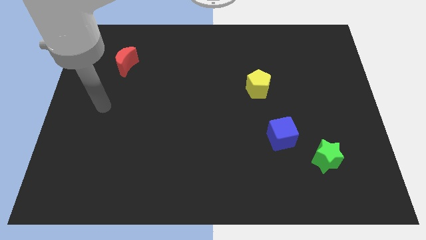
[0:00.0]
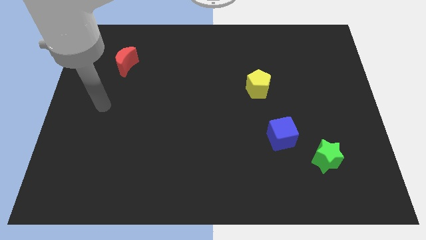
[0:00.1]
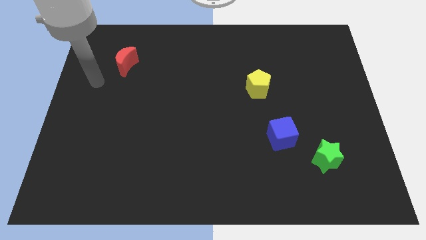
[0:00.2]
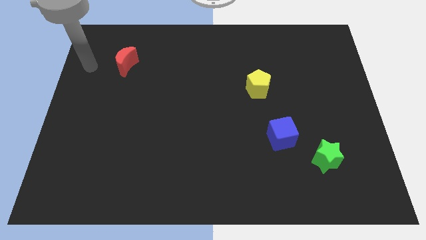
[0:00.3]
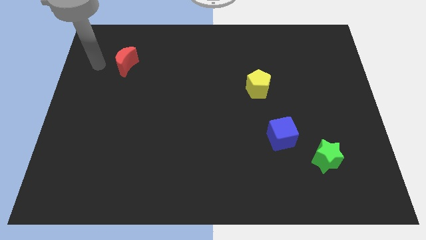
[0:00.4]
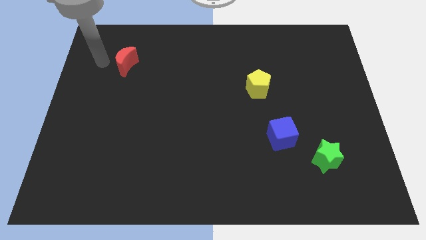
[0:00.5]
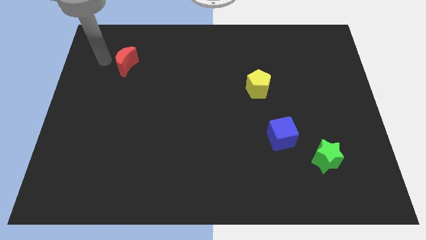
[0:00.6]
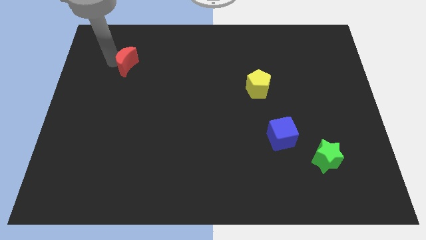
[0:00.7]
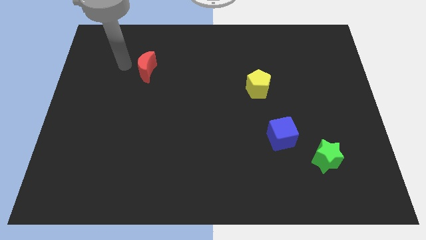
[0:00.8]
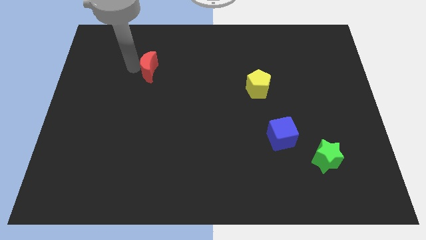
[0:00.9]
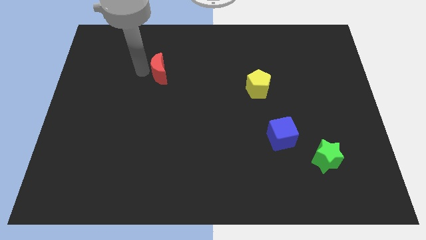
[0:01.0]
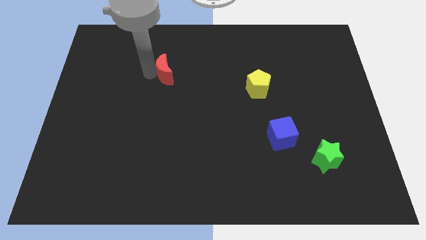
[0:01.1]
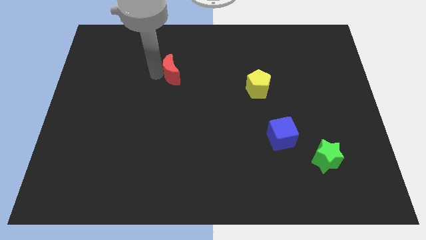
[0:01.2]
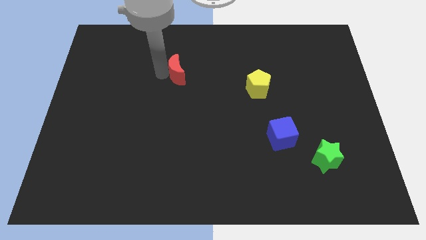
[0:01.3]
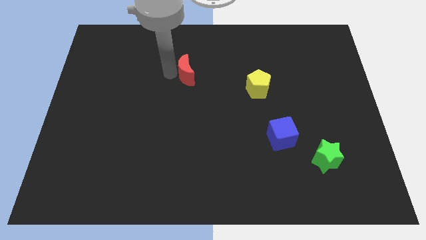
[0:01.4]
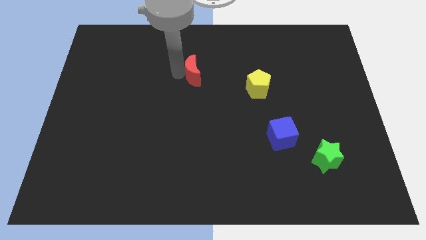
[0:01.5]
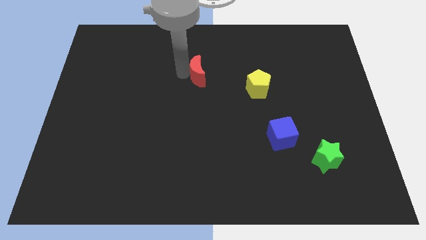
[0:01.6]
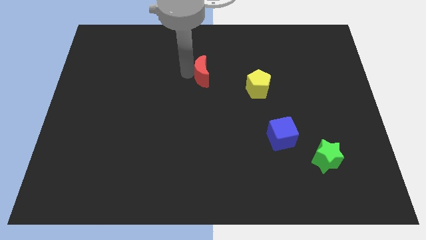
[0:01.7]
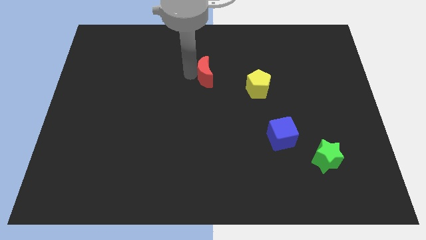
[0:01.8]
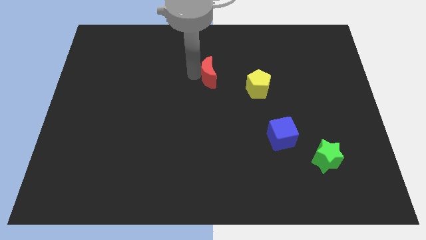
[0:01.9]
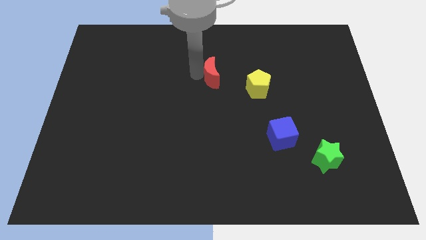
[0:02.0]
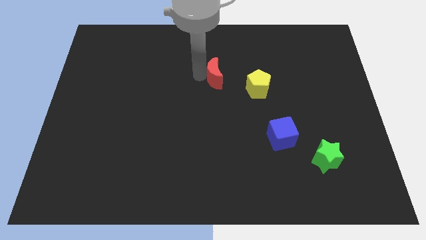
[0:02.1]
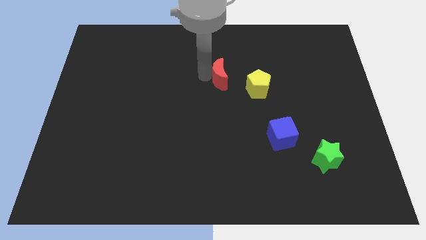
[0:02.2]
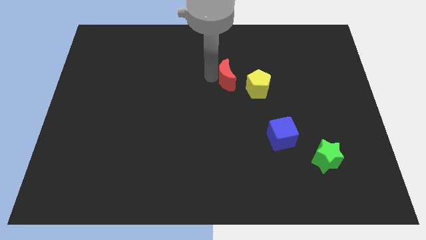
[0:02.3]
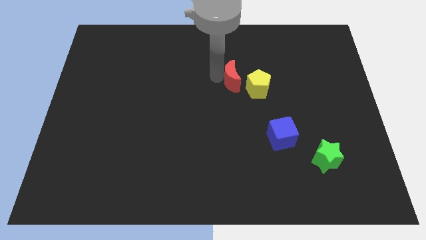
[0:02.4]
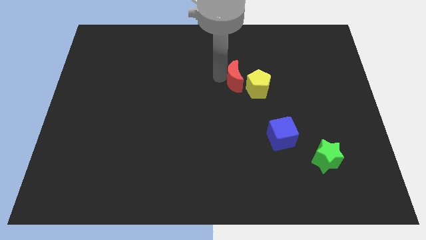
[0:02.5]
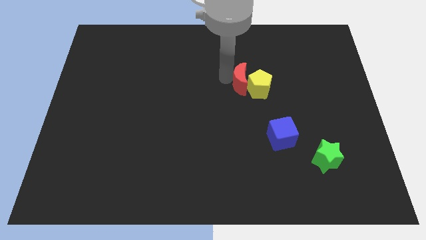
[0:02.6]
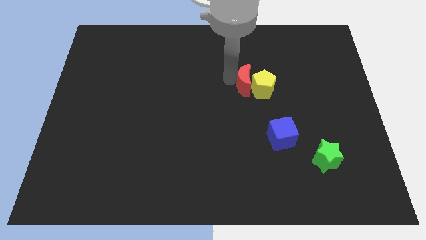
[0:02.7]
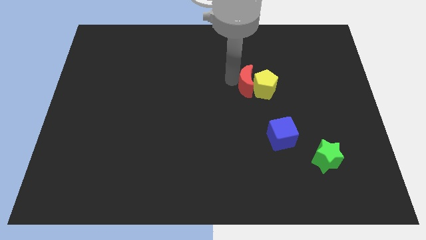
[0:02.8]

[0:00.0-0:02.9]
push the moon close to the yellow pentagon

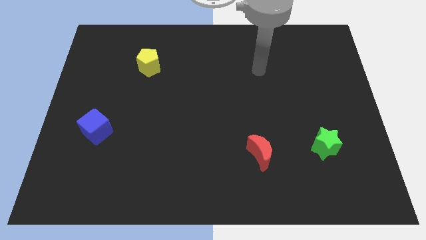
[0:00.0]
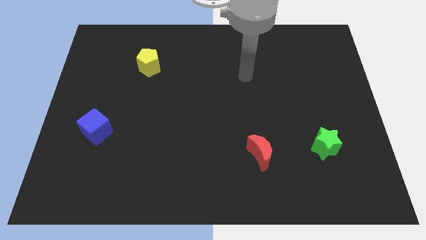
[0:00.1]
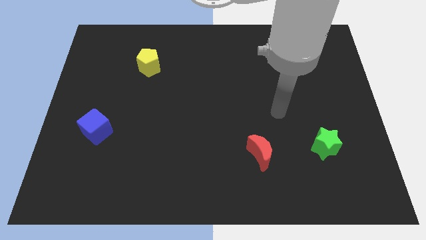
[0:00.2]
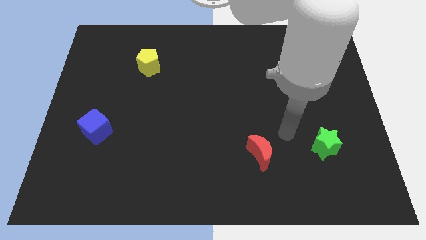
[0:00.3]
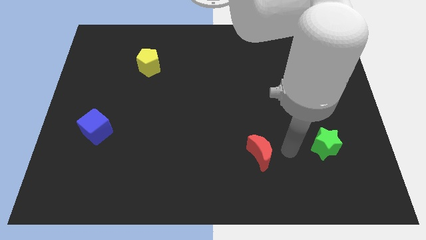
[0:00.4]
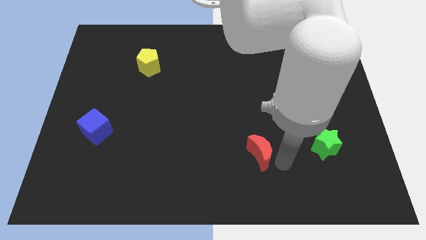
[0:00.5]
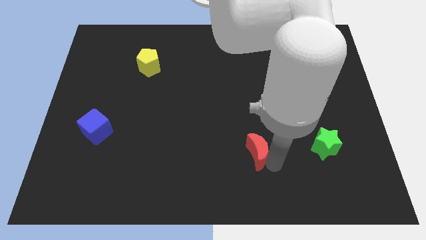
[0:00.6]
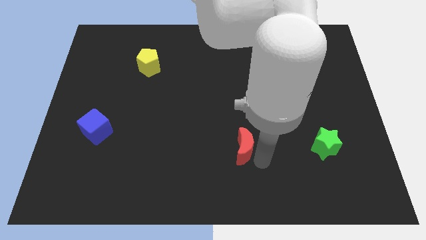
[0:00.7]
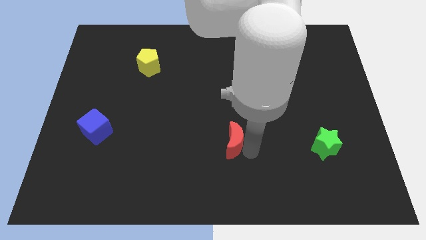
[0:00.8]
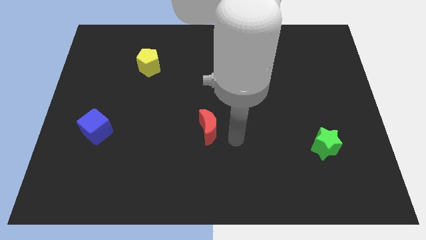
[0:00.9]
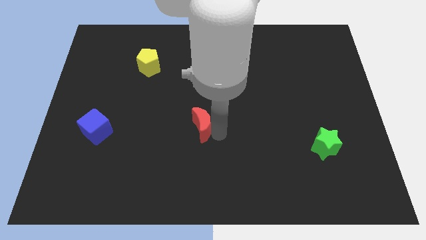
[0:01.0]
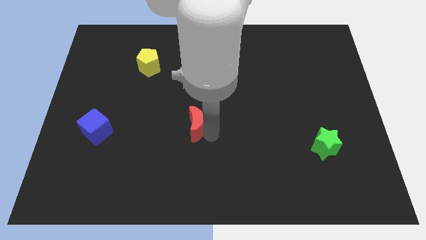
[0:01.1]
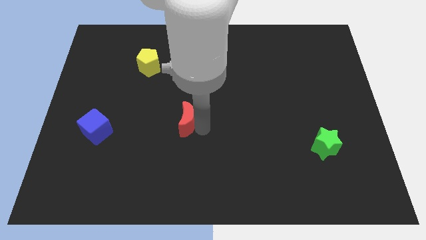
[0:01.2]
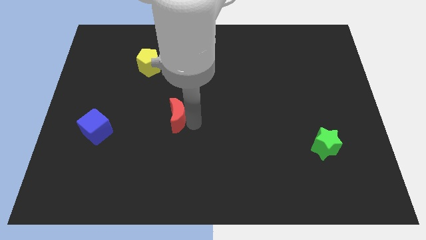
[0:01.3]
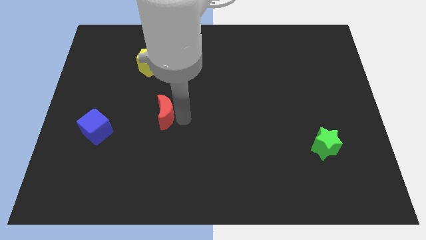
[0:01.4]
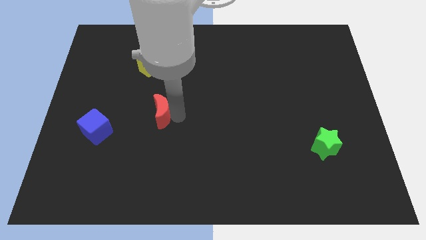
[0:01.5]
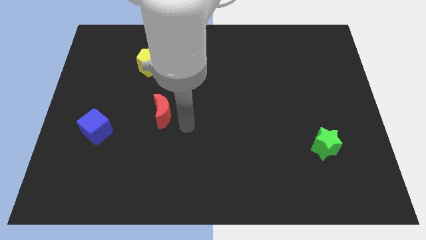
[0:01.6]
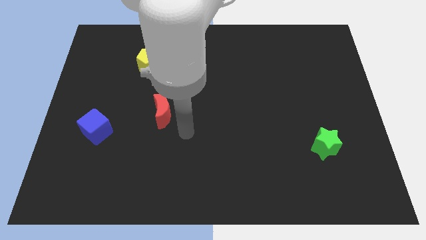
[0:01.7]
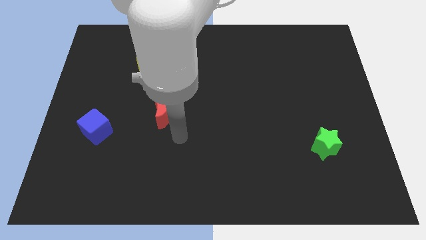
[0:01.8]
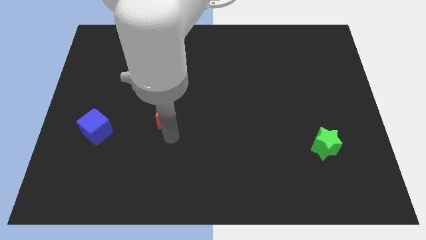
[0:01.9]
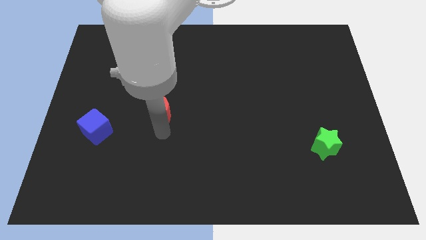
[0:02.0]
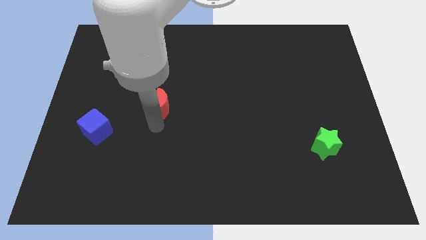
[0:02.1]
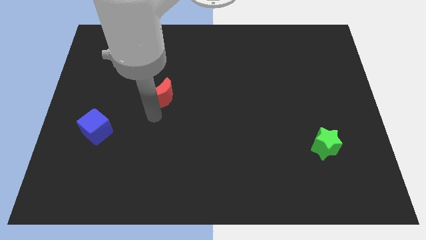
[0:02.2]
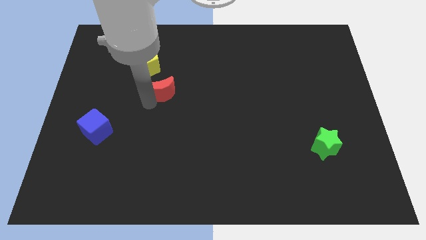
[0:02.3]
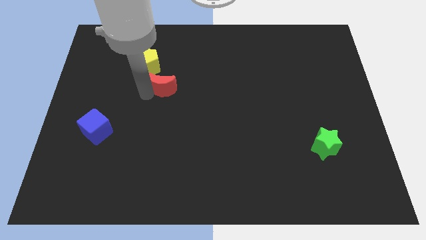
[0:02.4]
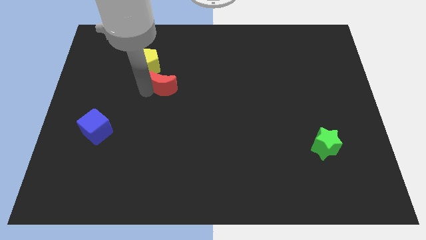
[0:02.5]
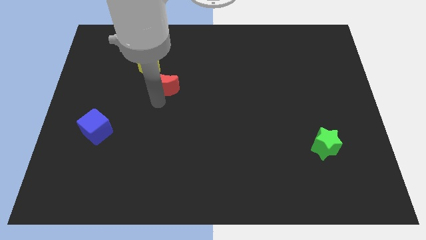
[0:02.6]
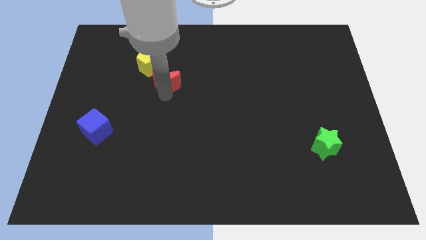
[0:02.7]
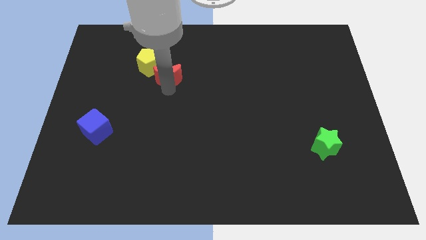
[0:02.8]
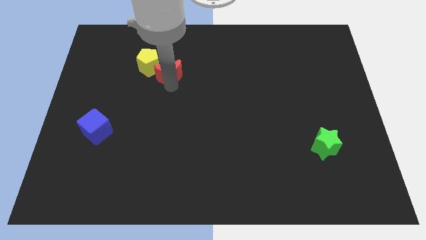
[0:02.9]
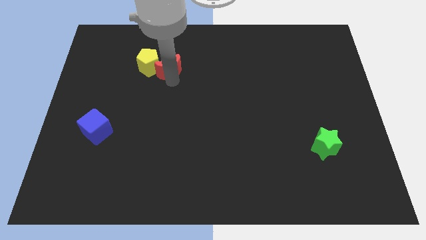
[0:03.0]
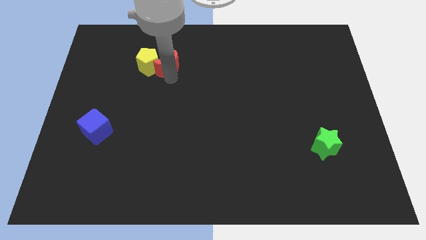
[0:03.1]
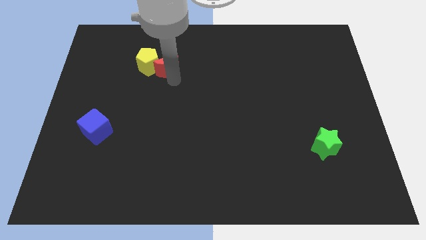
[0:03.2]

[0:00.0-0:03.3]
move the red block towards the yellow pentagon

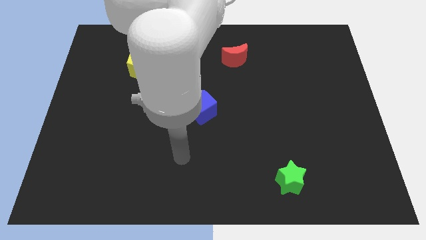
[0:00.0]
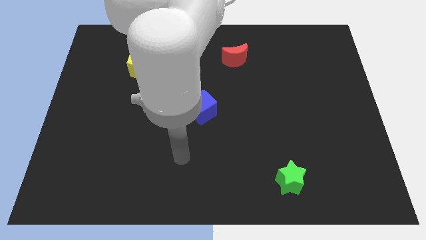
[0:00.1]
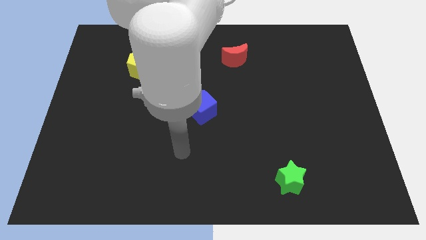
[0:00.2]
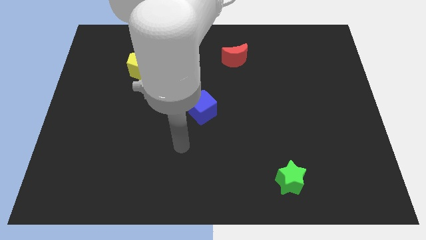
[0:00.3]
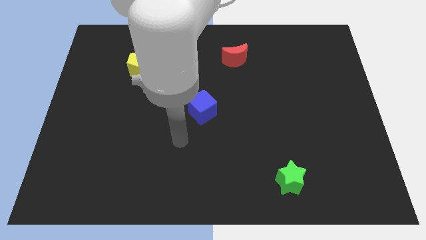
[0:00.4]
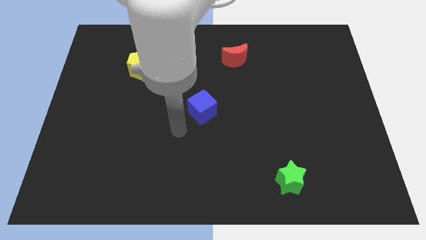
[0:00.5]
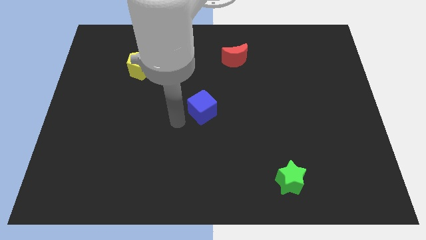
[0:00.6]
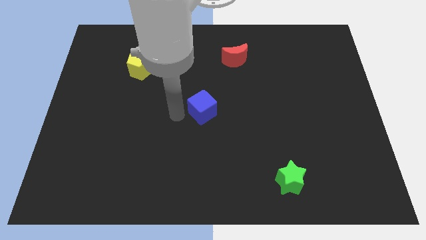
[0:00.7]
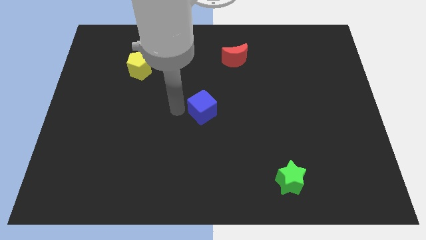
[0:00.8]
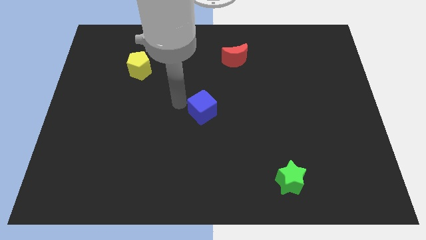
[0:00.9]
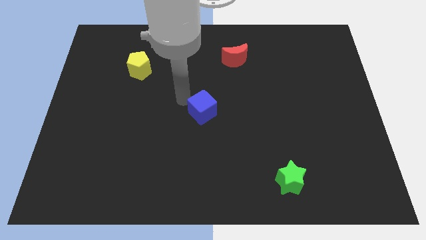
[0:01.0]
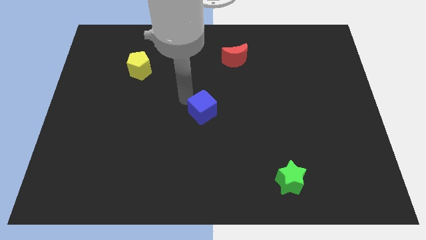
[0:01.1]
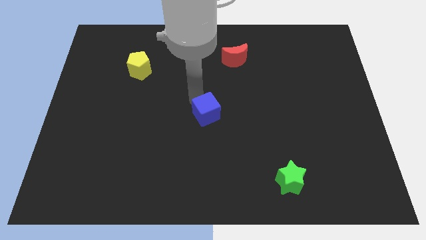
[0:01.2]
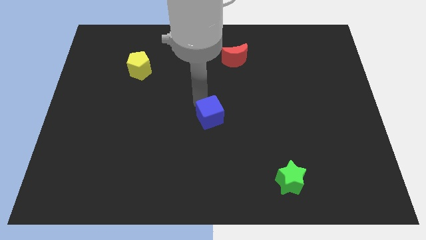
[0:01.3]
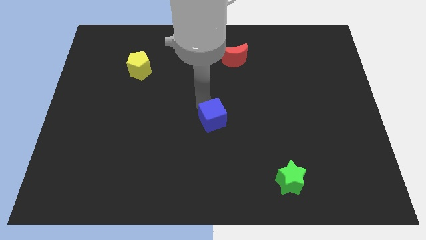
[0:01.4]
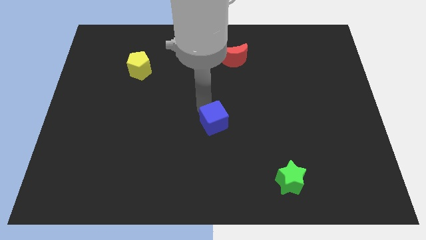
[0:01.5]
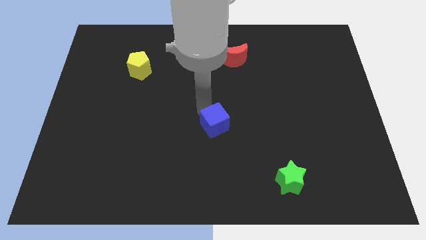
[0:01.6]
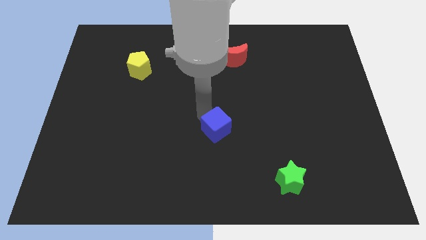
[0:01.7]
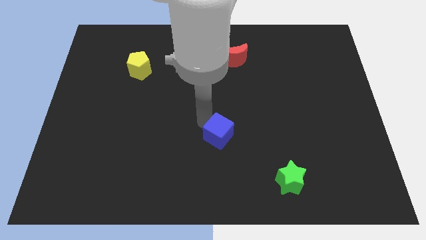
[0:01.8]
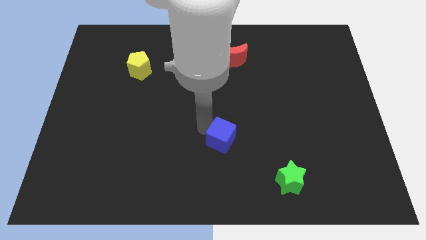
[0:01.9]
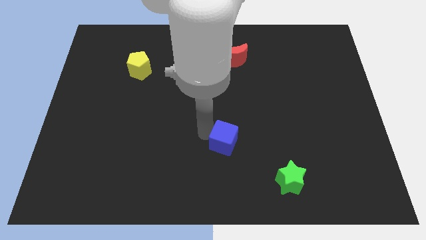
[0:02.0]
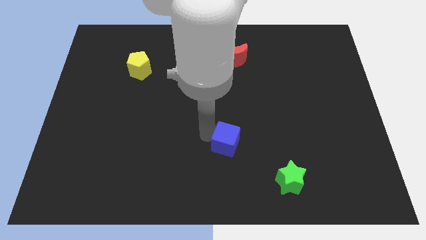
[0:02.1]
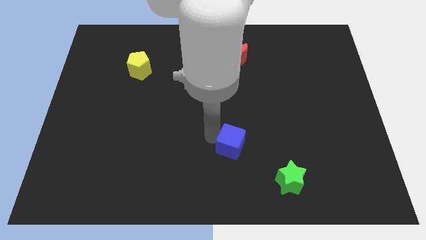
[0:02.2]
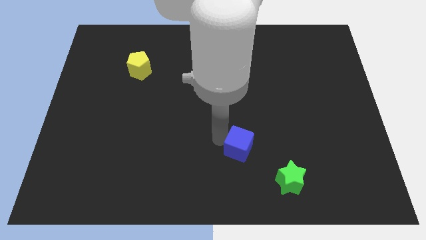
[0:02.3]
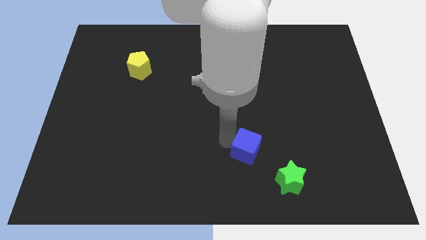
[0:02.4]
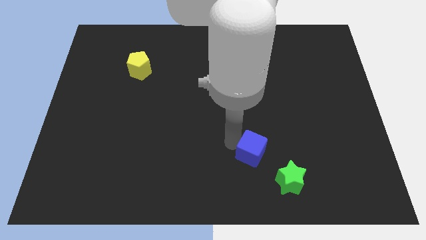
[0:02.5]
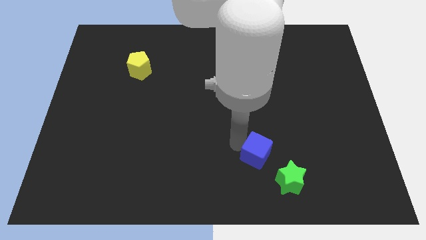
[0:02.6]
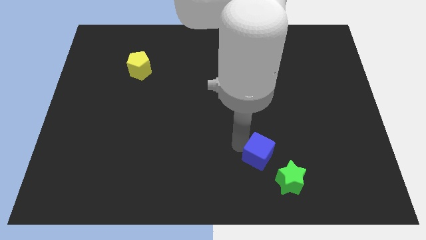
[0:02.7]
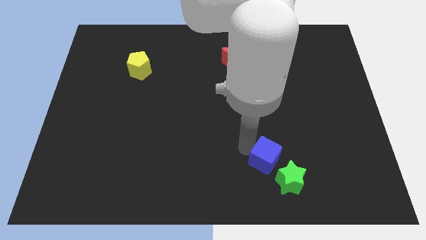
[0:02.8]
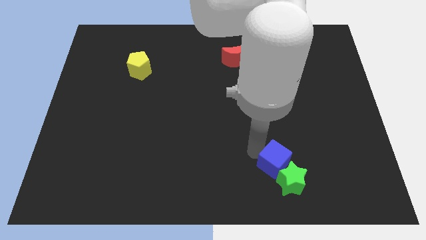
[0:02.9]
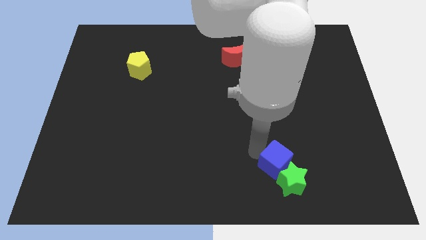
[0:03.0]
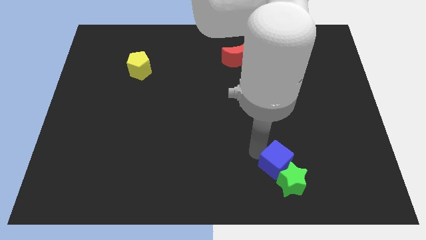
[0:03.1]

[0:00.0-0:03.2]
slide the blue cube to the green star
